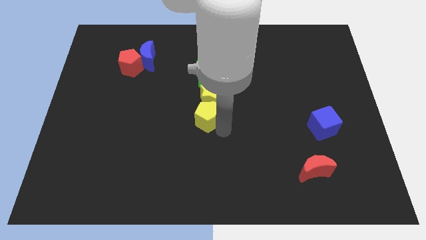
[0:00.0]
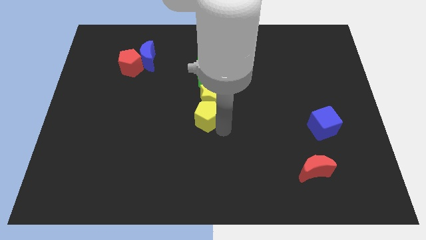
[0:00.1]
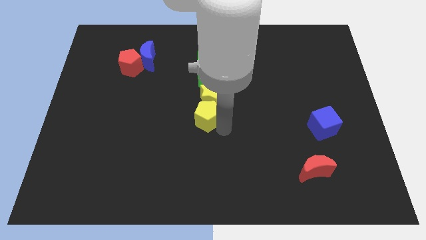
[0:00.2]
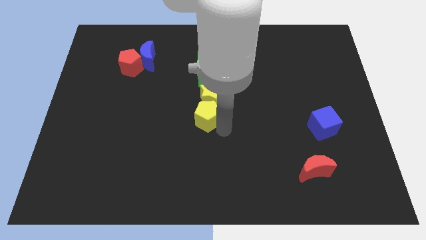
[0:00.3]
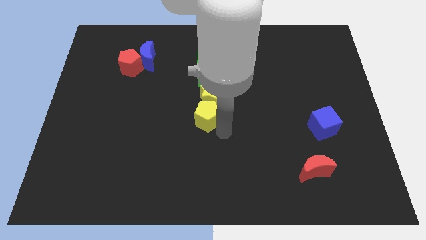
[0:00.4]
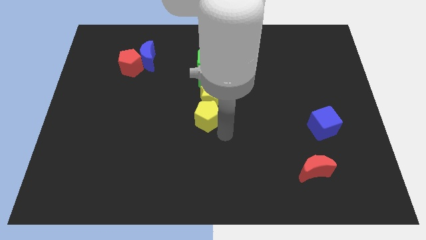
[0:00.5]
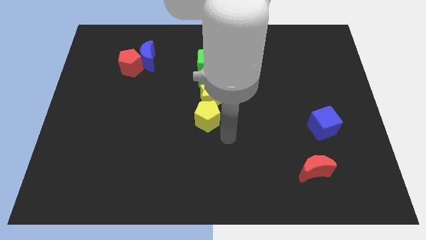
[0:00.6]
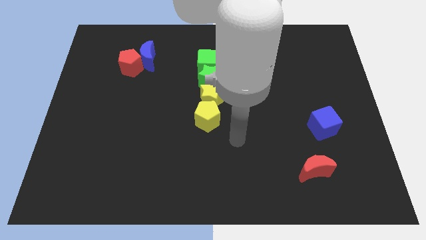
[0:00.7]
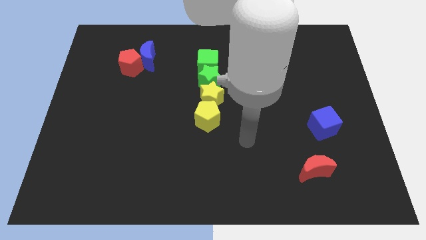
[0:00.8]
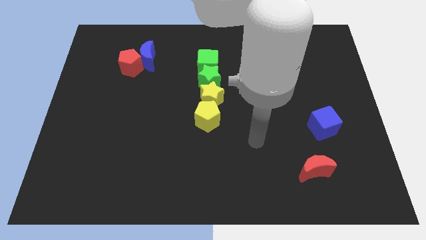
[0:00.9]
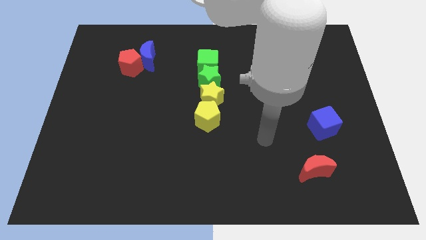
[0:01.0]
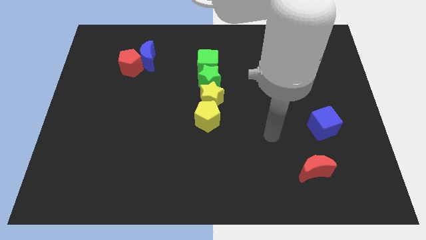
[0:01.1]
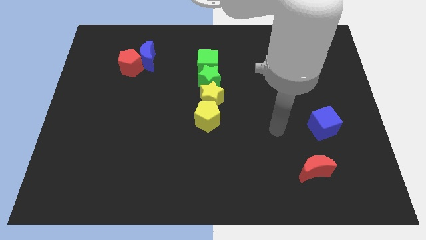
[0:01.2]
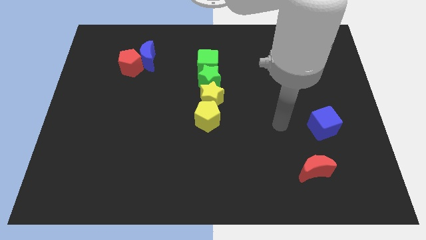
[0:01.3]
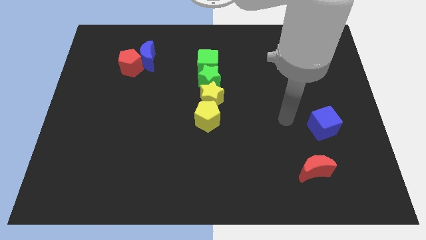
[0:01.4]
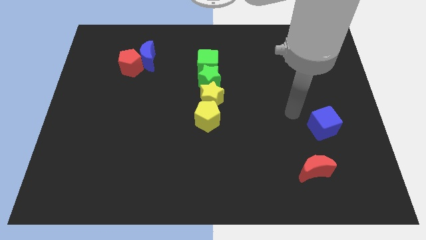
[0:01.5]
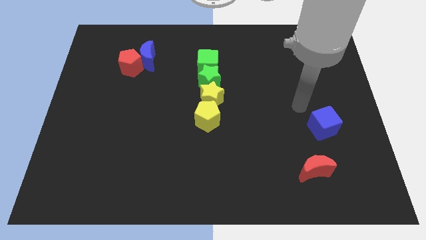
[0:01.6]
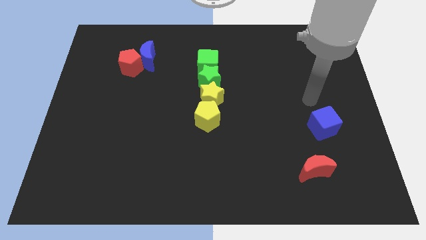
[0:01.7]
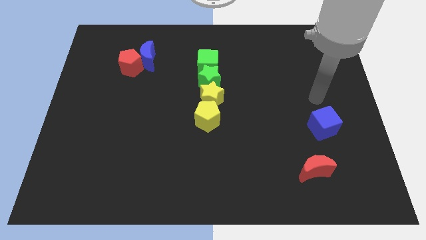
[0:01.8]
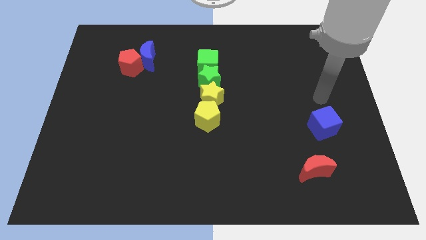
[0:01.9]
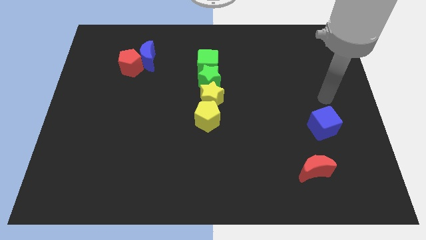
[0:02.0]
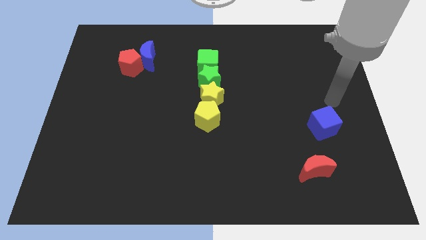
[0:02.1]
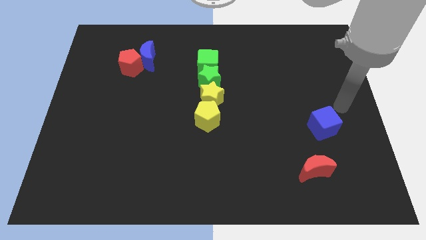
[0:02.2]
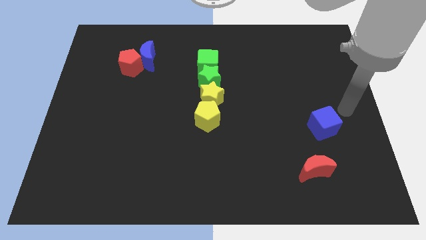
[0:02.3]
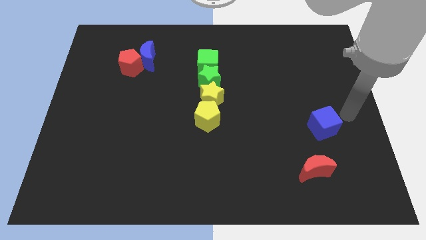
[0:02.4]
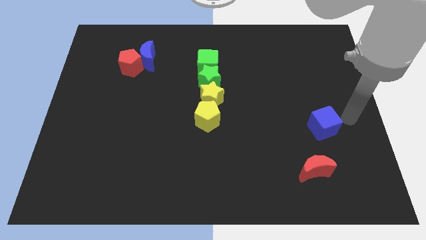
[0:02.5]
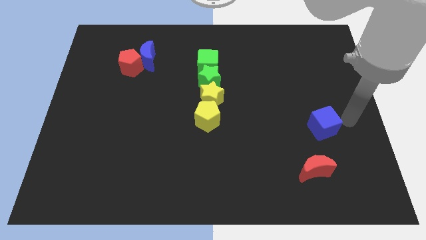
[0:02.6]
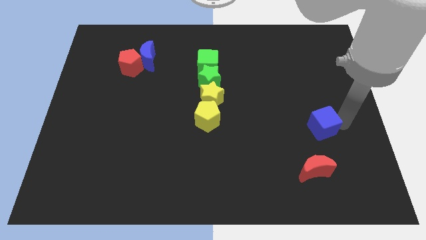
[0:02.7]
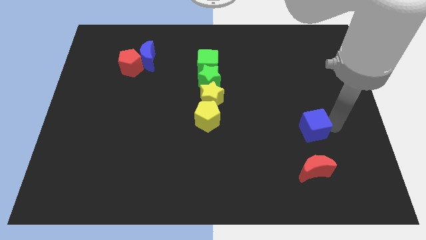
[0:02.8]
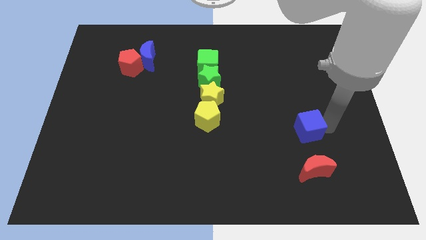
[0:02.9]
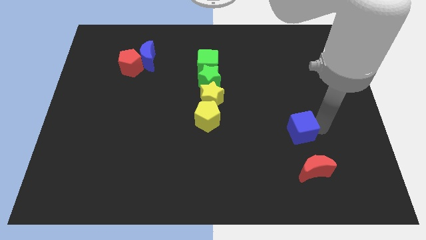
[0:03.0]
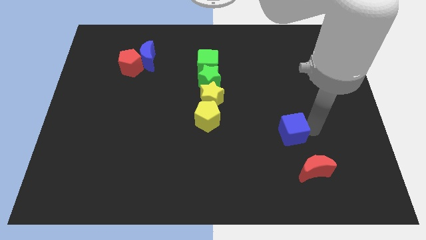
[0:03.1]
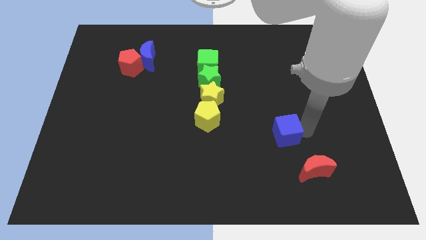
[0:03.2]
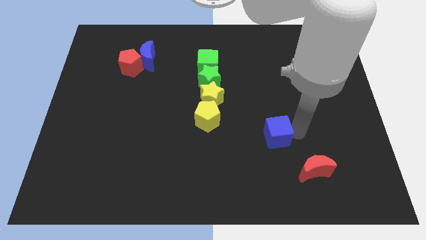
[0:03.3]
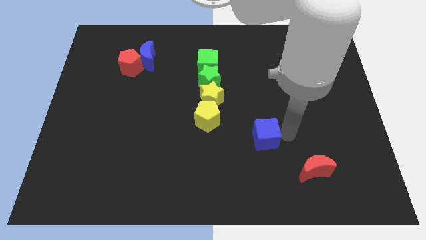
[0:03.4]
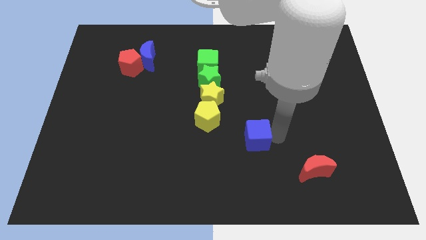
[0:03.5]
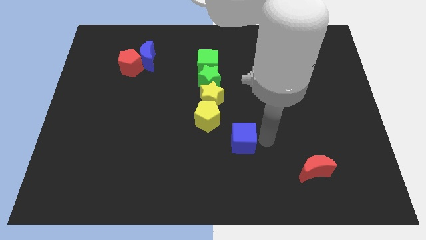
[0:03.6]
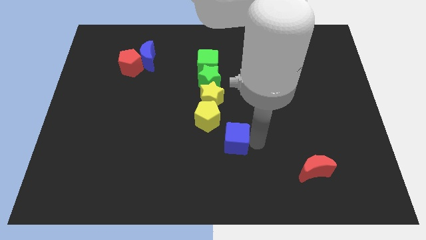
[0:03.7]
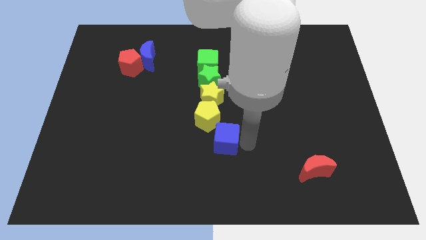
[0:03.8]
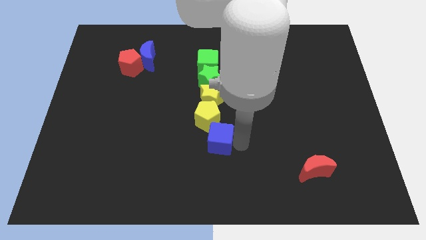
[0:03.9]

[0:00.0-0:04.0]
push the blue cube to the left

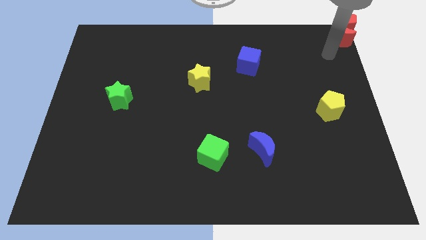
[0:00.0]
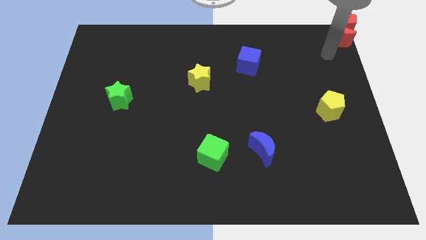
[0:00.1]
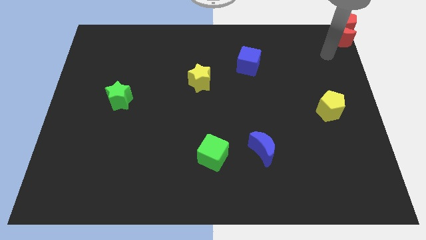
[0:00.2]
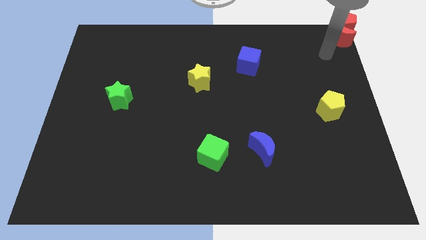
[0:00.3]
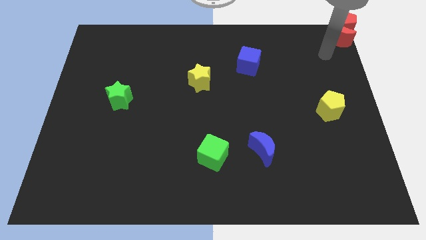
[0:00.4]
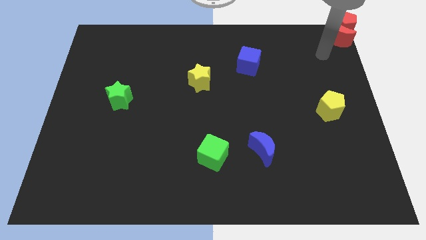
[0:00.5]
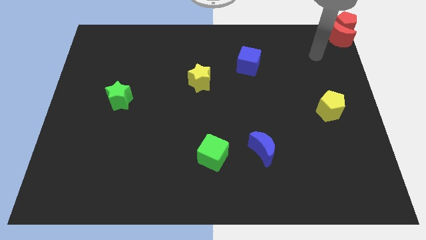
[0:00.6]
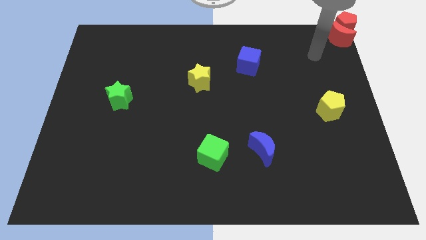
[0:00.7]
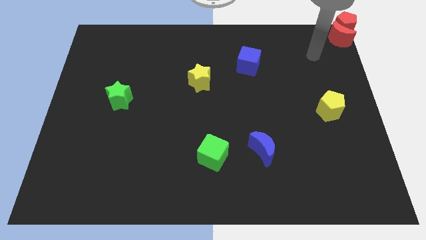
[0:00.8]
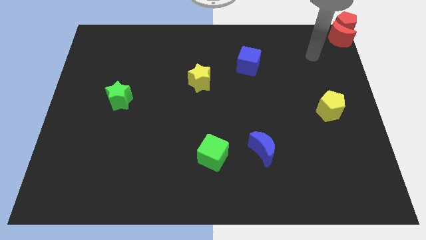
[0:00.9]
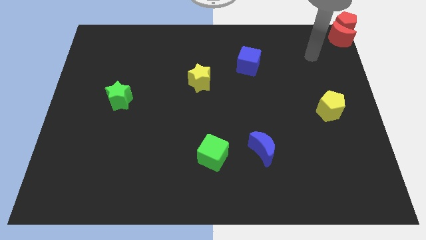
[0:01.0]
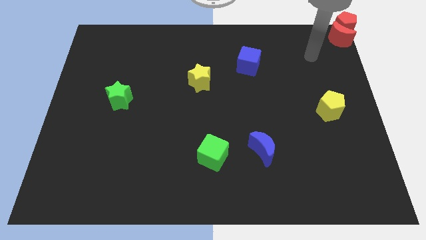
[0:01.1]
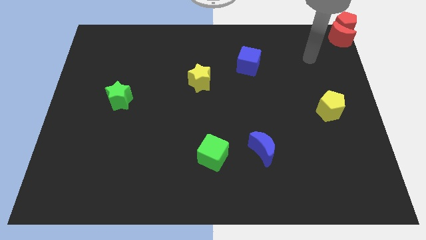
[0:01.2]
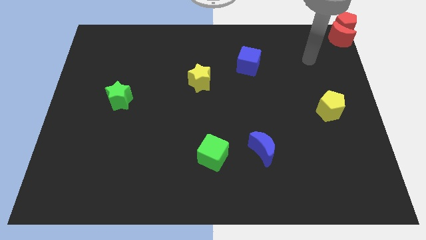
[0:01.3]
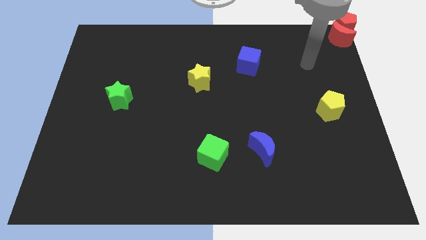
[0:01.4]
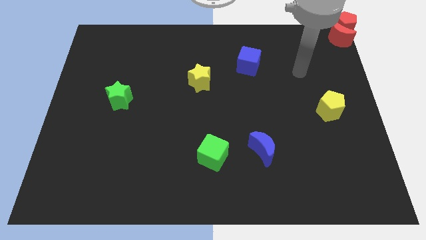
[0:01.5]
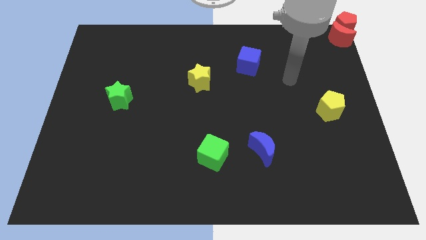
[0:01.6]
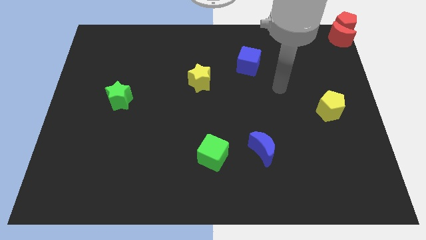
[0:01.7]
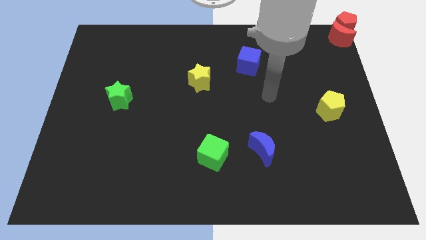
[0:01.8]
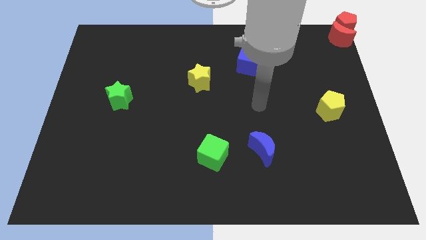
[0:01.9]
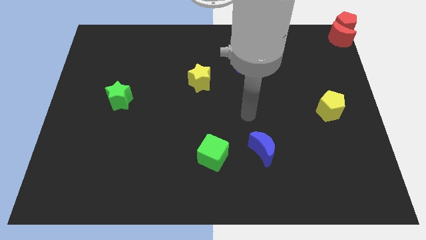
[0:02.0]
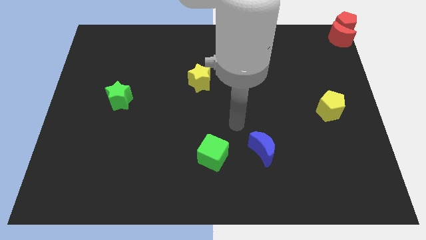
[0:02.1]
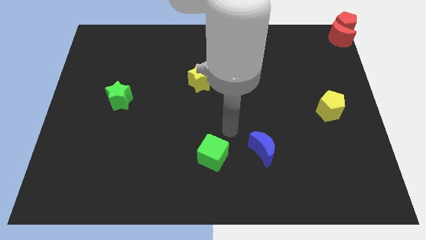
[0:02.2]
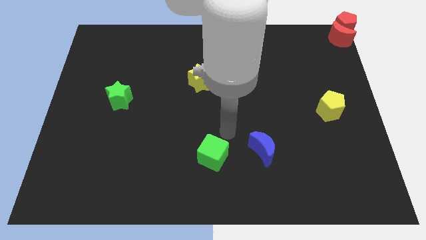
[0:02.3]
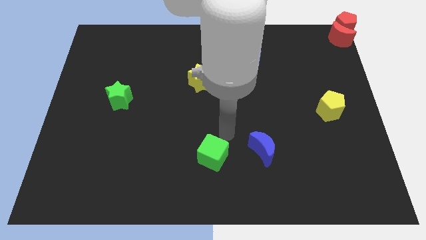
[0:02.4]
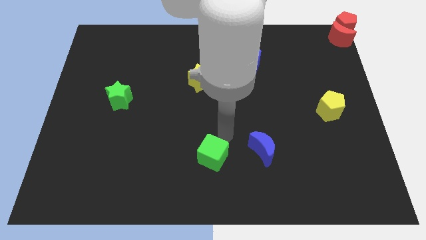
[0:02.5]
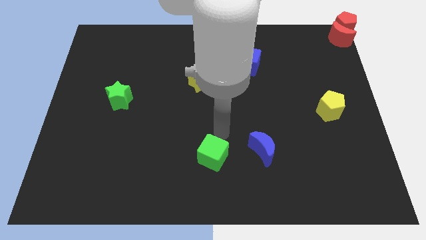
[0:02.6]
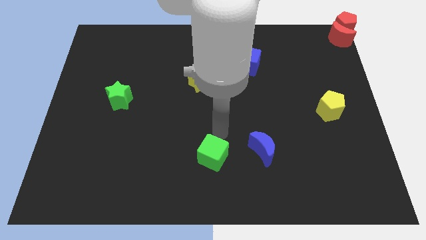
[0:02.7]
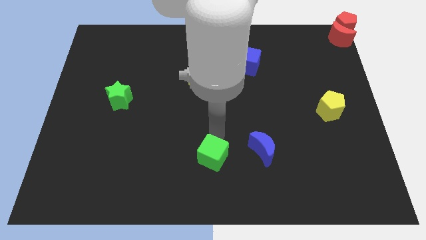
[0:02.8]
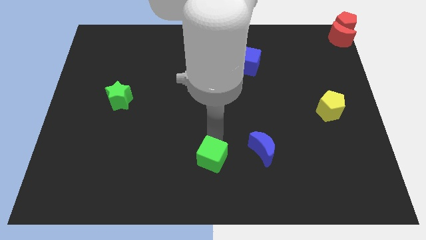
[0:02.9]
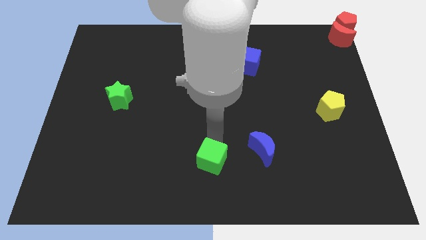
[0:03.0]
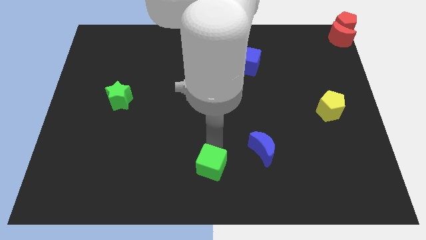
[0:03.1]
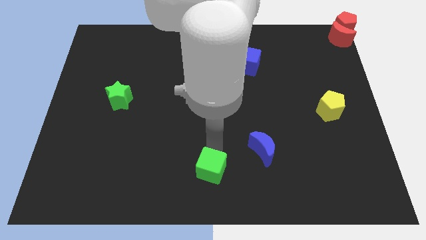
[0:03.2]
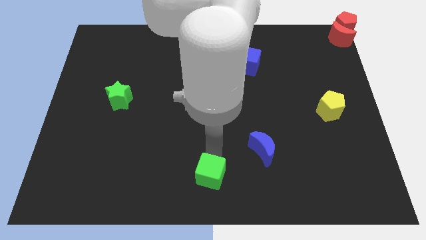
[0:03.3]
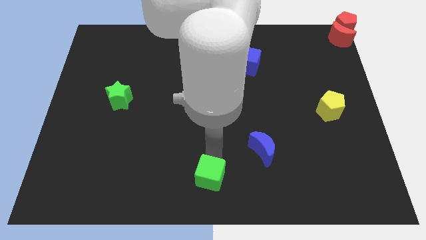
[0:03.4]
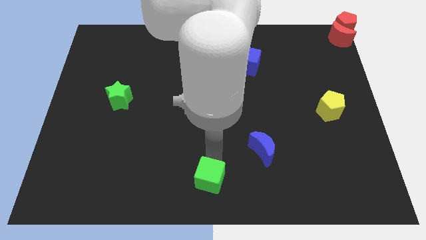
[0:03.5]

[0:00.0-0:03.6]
push the green cube towards the bottom center of the board

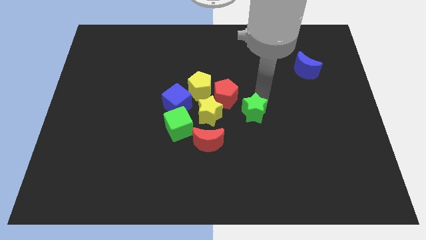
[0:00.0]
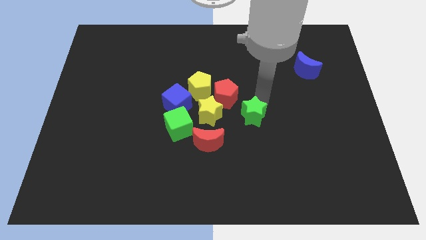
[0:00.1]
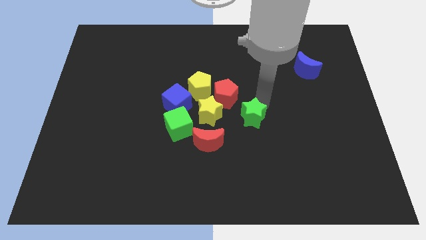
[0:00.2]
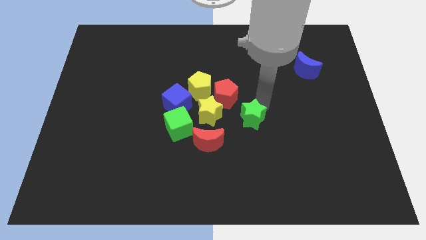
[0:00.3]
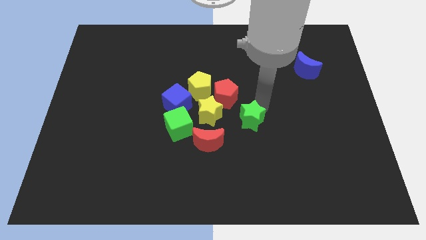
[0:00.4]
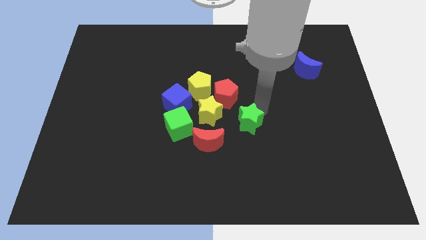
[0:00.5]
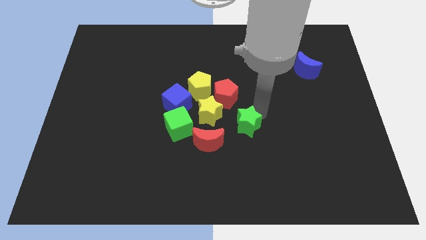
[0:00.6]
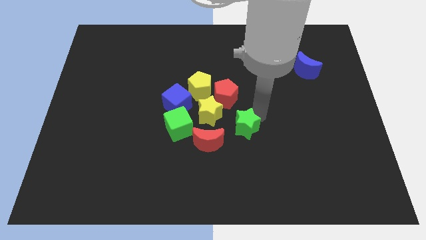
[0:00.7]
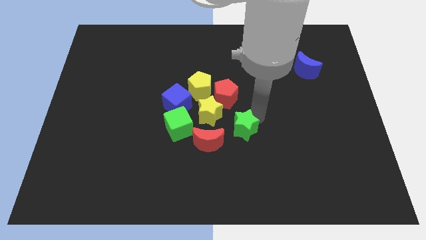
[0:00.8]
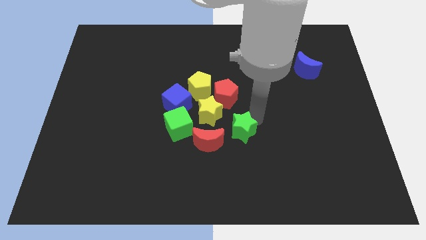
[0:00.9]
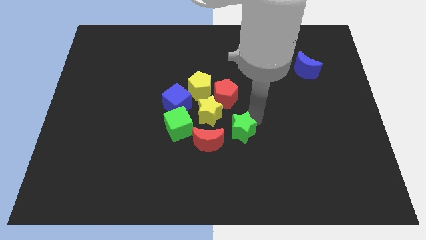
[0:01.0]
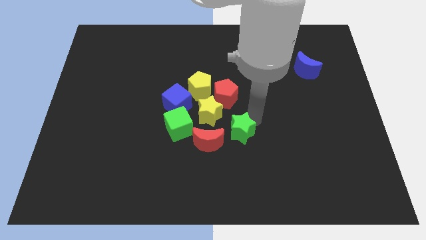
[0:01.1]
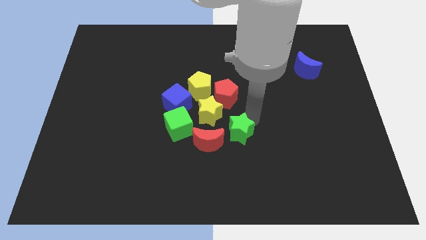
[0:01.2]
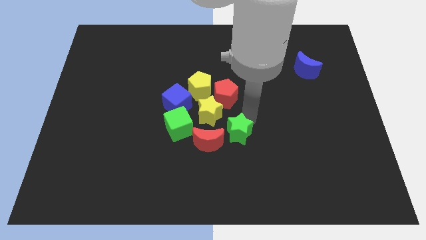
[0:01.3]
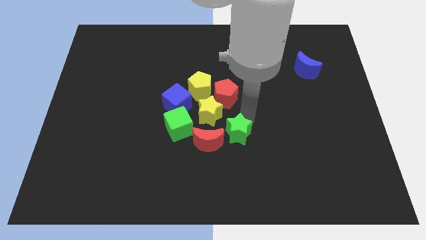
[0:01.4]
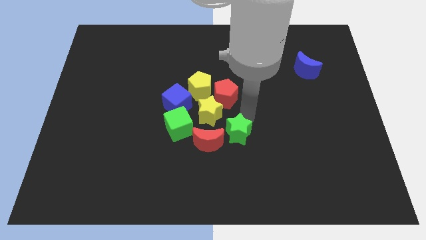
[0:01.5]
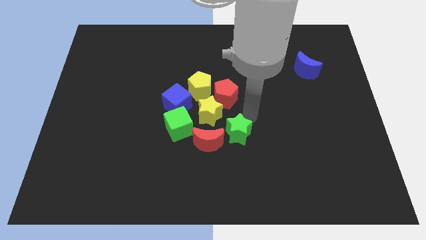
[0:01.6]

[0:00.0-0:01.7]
move the green star right to the red crescent
